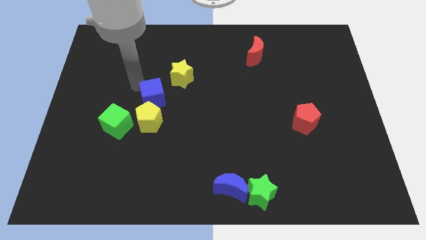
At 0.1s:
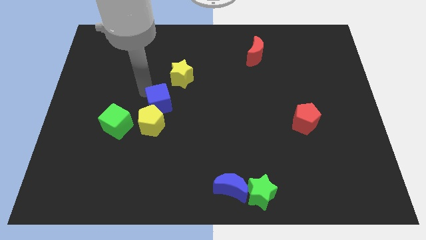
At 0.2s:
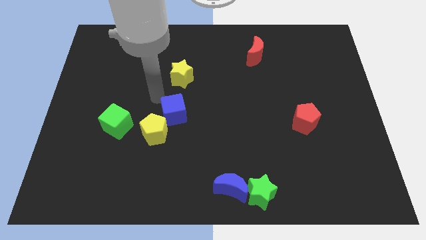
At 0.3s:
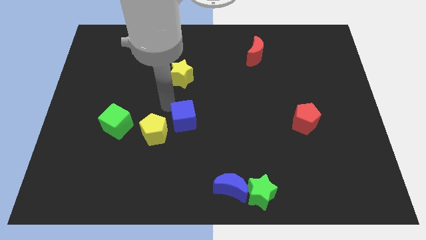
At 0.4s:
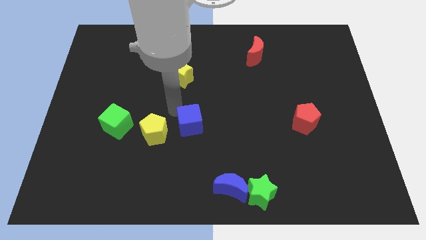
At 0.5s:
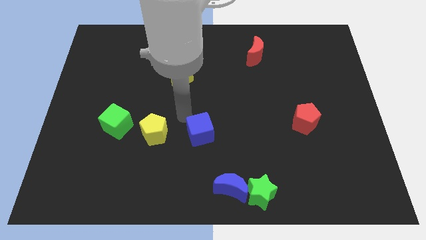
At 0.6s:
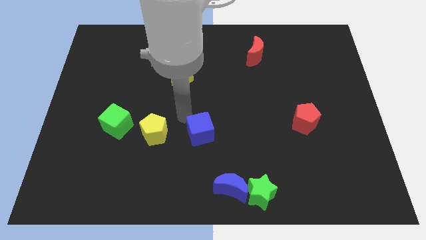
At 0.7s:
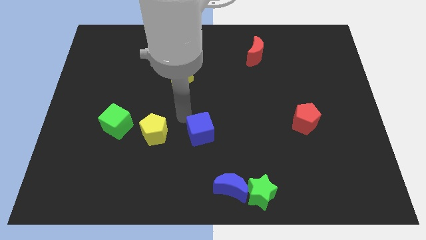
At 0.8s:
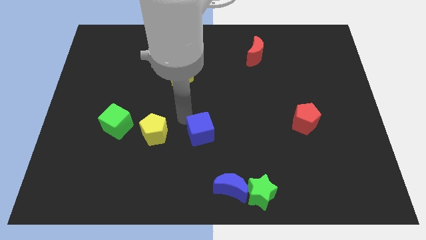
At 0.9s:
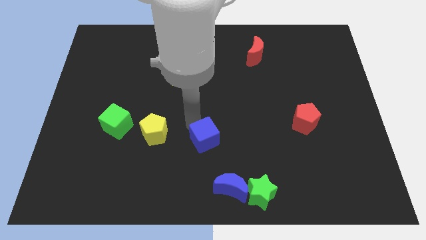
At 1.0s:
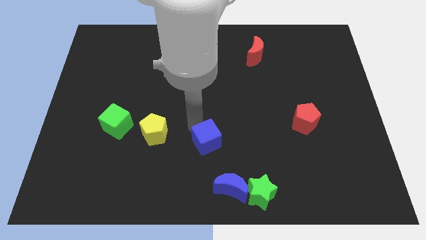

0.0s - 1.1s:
separate blue cube from yellow pentagon

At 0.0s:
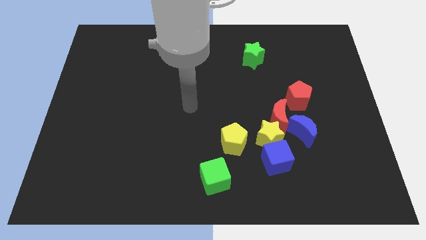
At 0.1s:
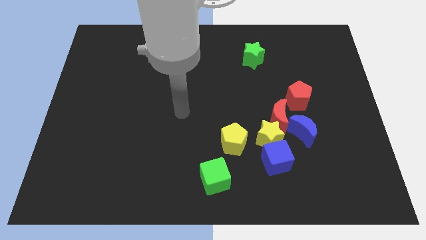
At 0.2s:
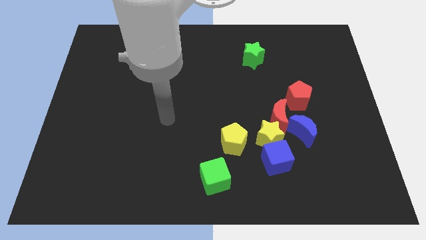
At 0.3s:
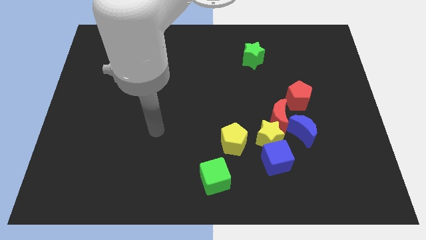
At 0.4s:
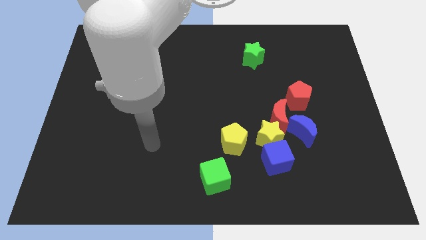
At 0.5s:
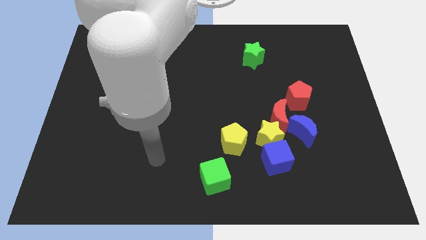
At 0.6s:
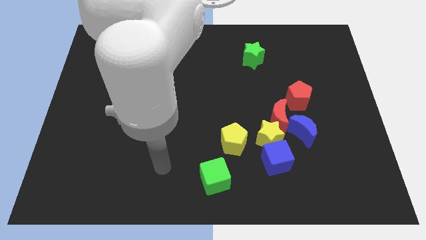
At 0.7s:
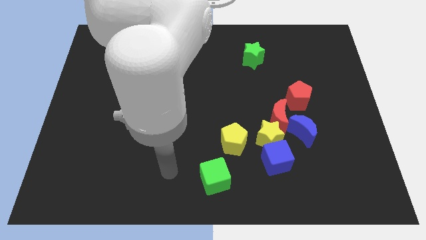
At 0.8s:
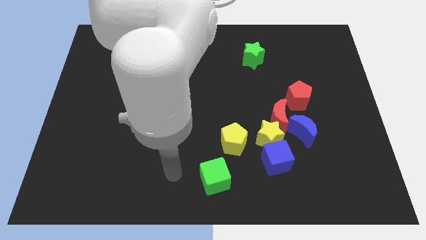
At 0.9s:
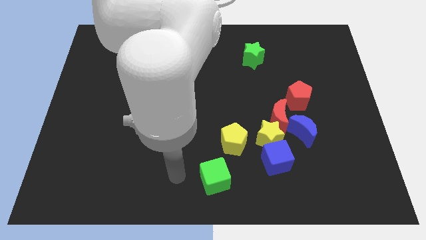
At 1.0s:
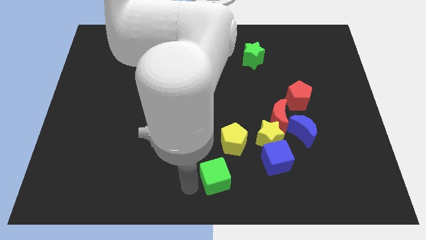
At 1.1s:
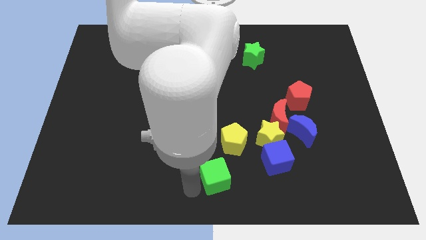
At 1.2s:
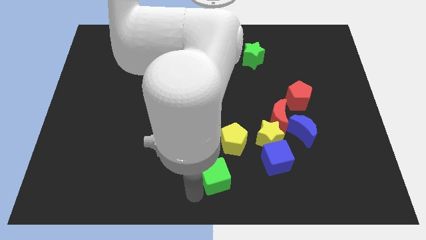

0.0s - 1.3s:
move your arm towards the green cube

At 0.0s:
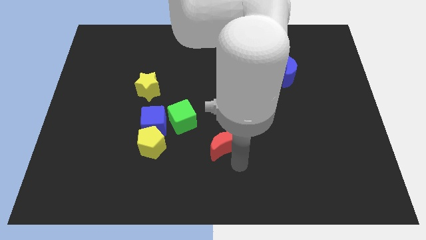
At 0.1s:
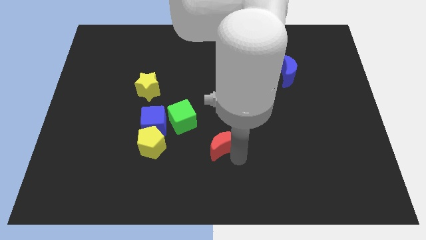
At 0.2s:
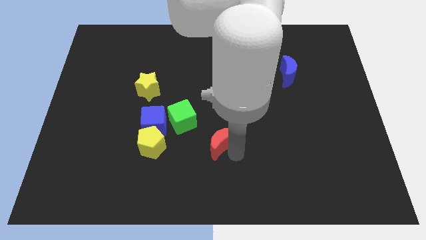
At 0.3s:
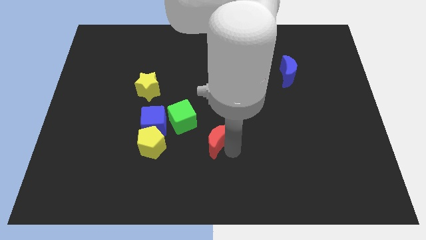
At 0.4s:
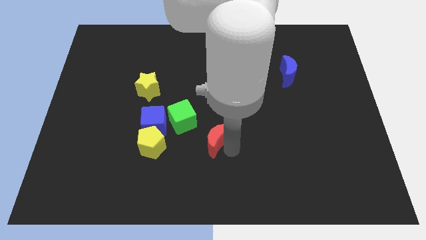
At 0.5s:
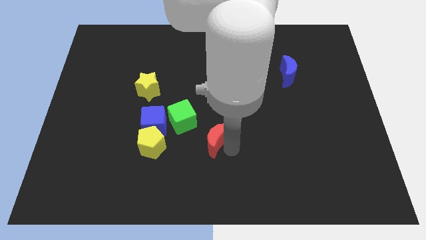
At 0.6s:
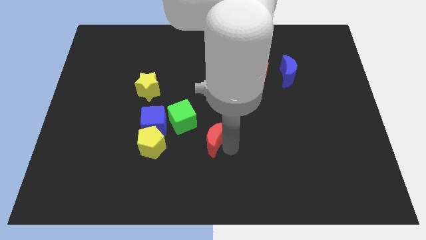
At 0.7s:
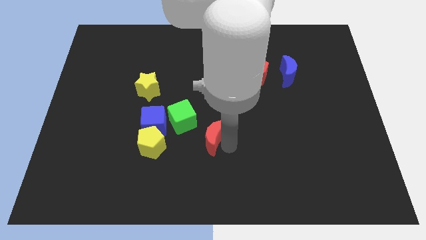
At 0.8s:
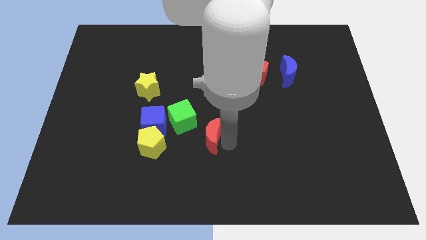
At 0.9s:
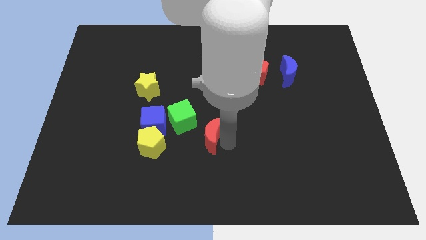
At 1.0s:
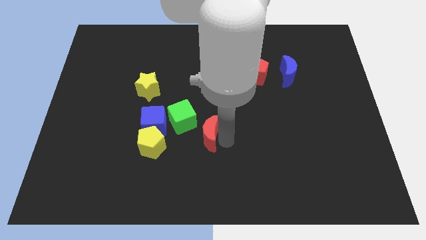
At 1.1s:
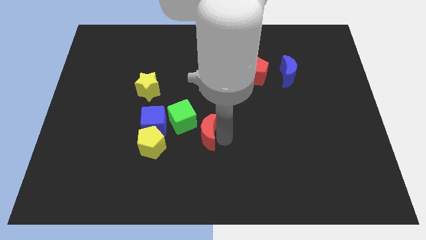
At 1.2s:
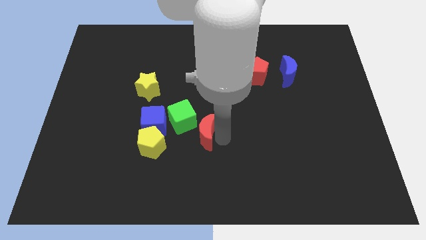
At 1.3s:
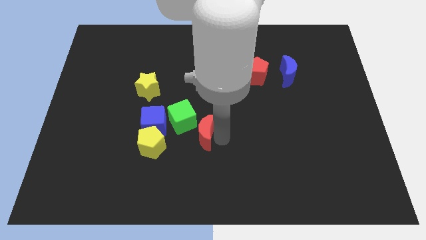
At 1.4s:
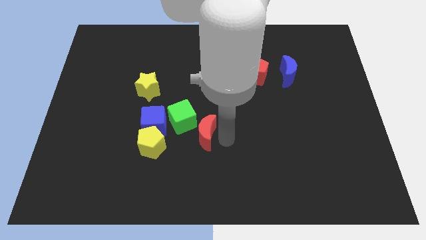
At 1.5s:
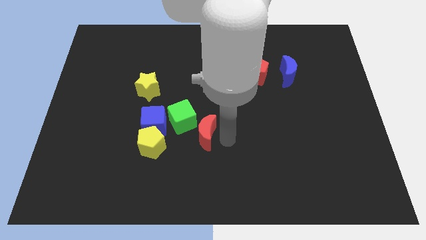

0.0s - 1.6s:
slide the red moon close to the green cube

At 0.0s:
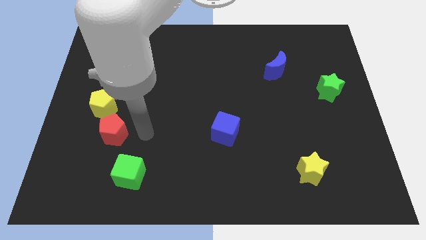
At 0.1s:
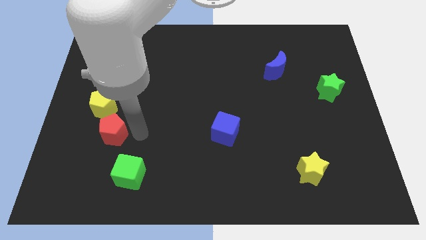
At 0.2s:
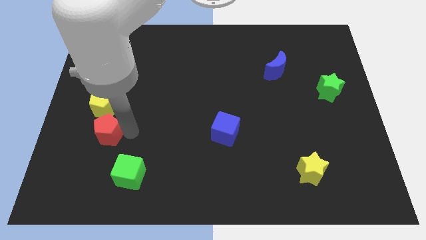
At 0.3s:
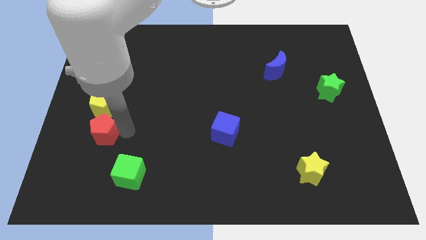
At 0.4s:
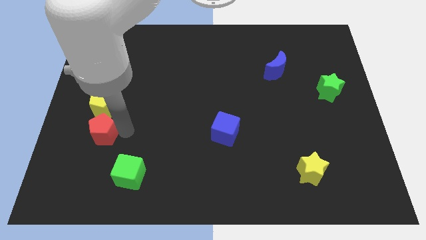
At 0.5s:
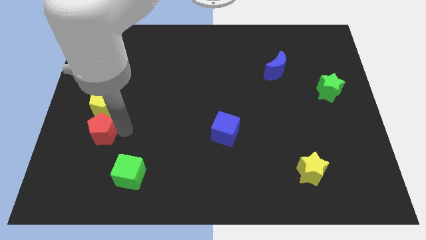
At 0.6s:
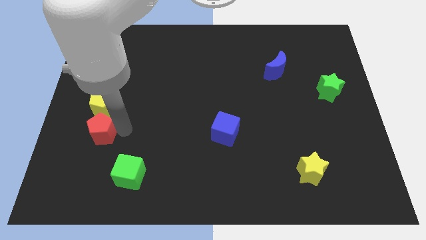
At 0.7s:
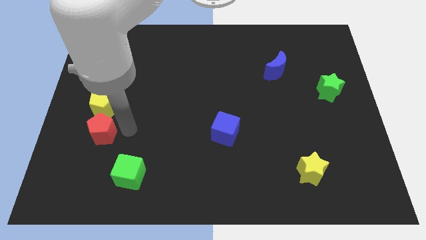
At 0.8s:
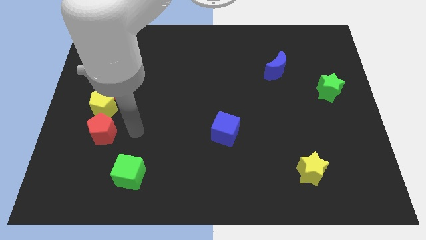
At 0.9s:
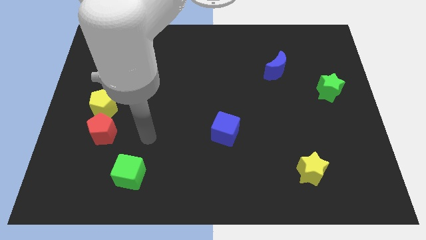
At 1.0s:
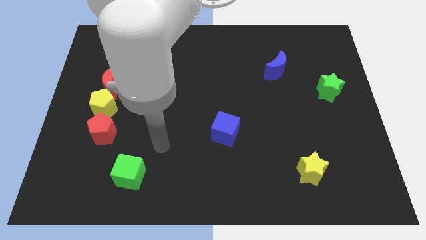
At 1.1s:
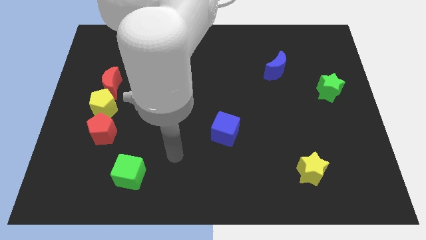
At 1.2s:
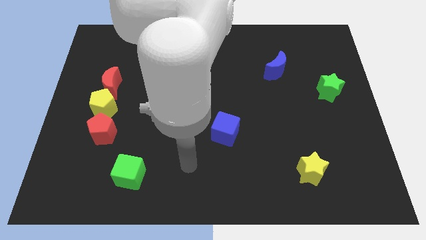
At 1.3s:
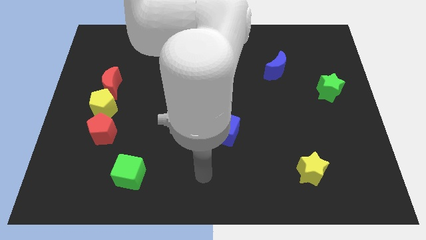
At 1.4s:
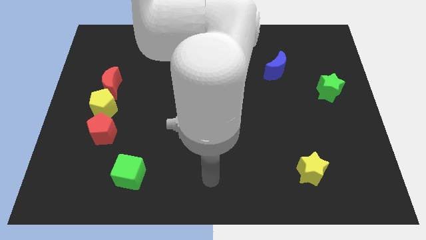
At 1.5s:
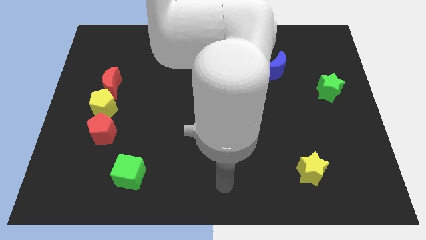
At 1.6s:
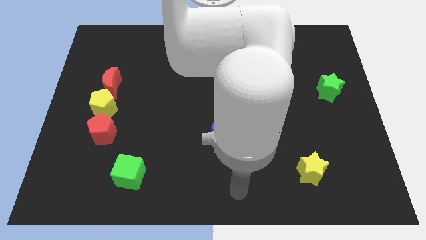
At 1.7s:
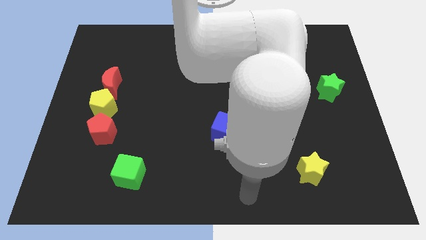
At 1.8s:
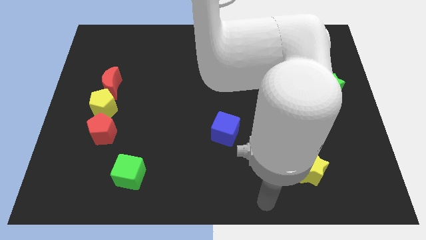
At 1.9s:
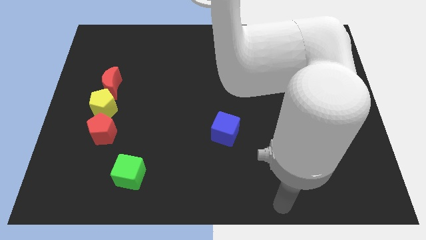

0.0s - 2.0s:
place the red pentagon below the yellow pentagon

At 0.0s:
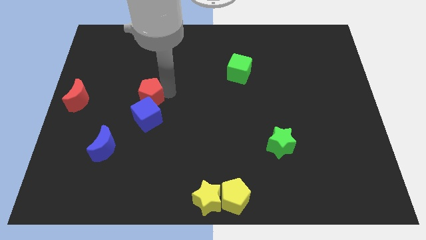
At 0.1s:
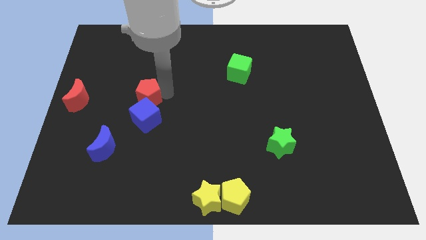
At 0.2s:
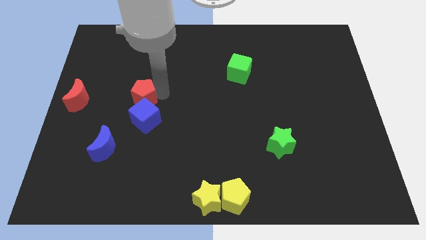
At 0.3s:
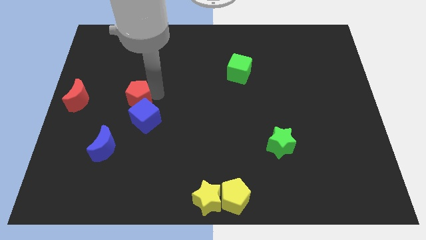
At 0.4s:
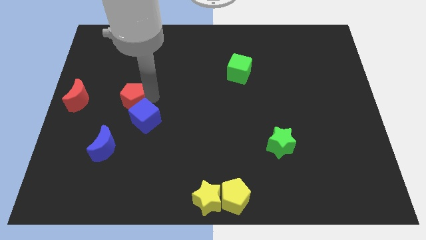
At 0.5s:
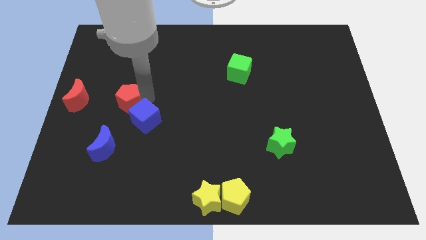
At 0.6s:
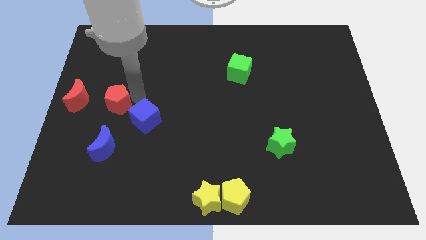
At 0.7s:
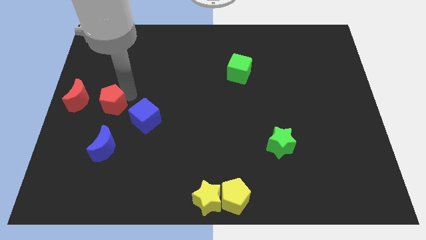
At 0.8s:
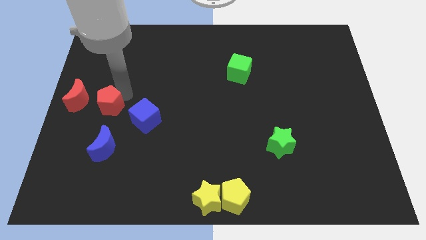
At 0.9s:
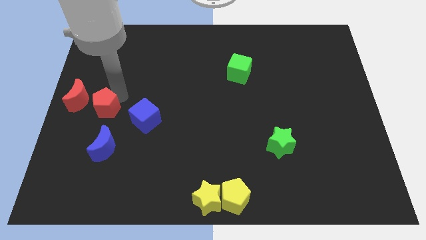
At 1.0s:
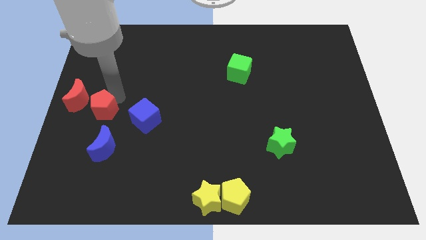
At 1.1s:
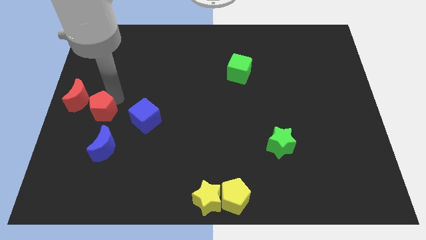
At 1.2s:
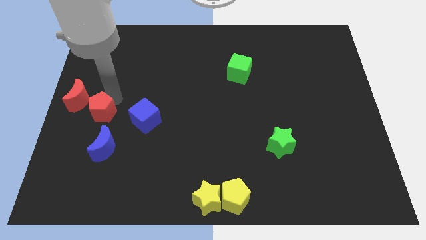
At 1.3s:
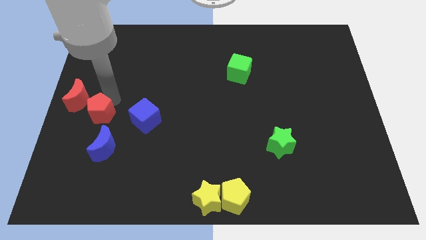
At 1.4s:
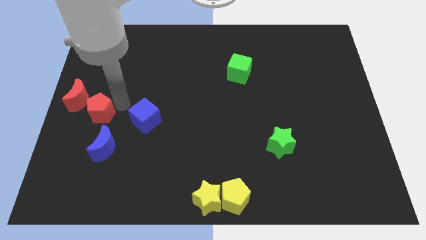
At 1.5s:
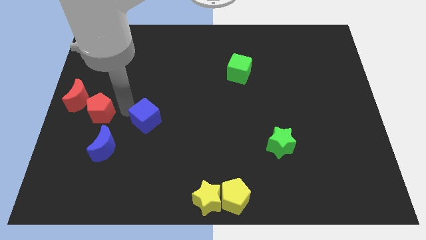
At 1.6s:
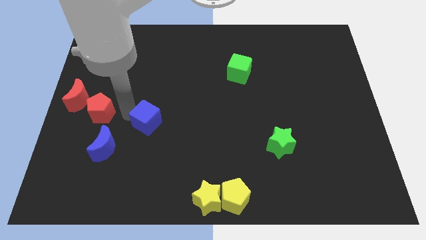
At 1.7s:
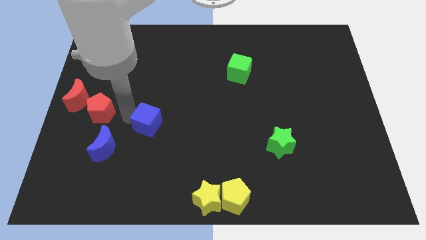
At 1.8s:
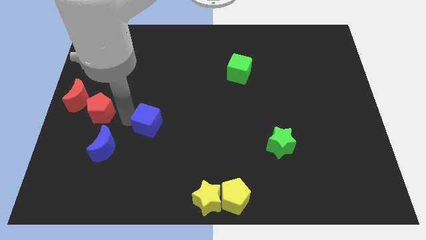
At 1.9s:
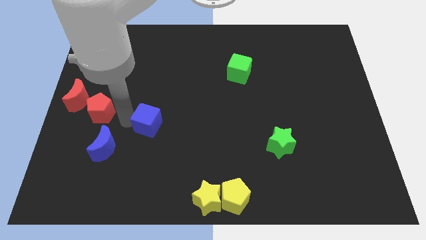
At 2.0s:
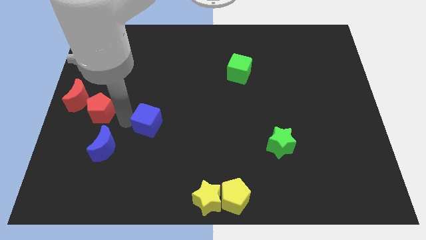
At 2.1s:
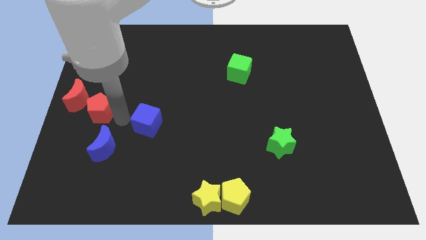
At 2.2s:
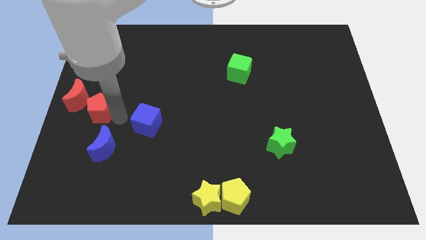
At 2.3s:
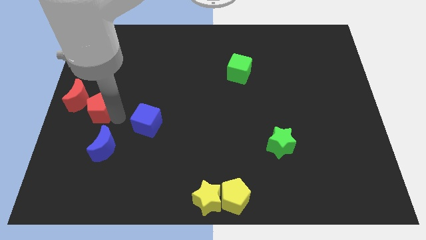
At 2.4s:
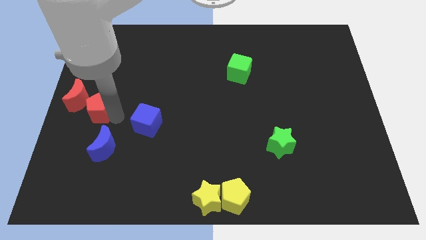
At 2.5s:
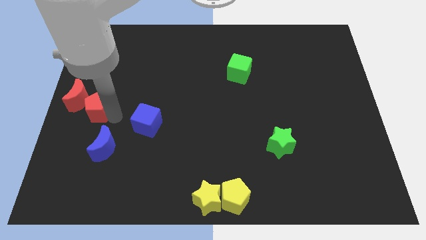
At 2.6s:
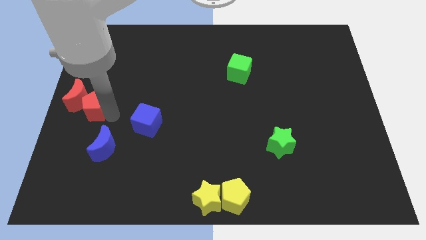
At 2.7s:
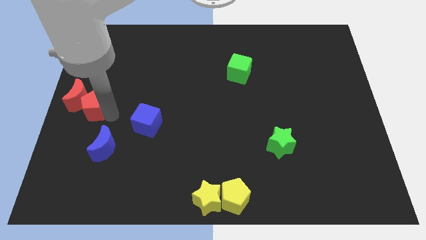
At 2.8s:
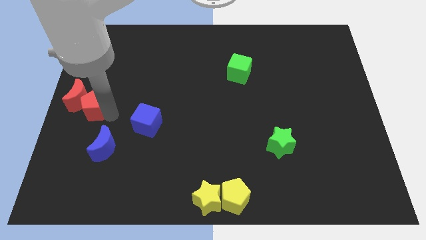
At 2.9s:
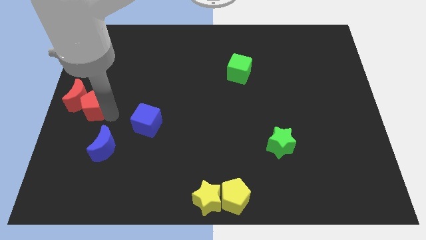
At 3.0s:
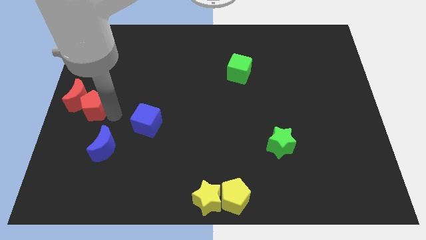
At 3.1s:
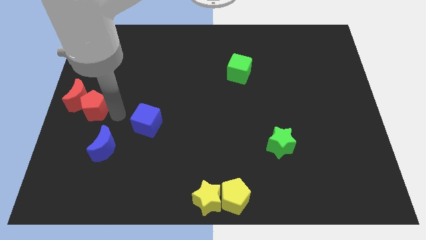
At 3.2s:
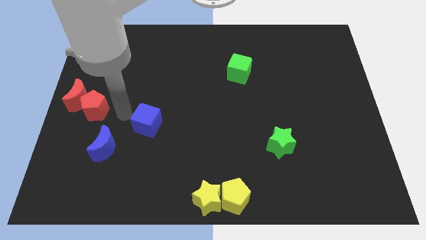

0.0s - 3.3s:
push the red pentagon into the red crescent
